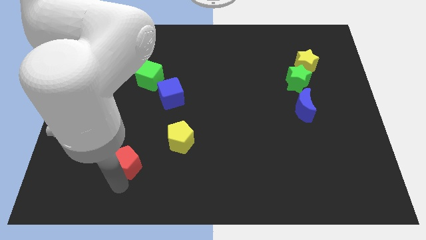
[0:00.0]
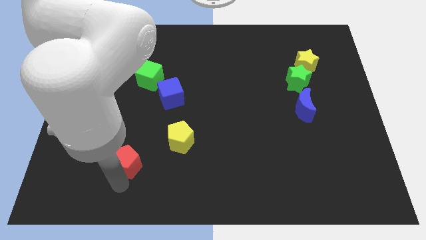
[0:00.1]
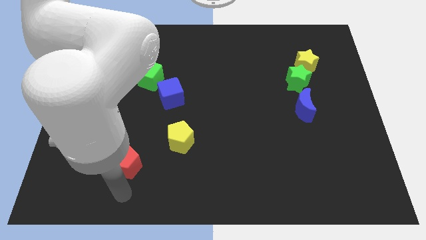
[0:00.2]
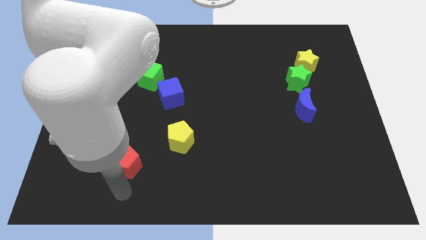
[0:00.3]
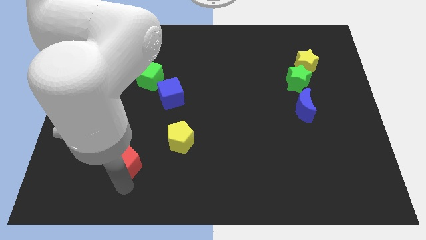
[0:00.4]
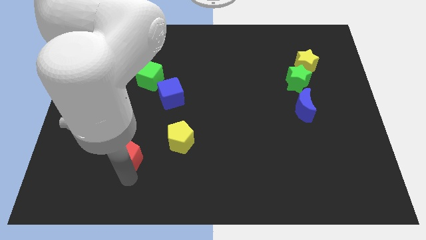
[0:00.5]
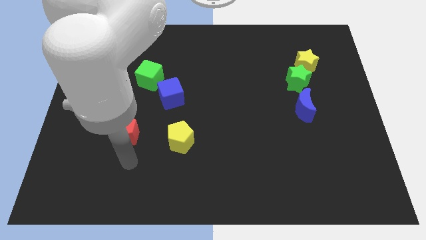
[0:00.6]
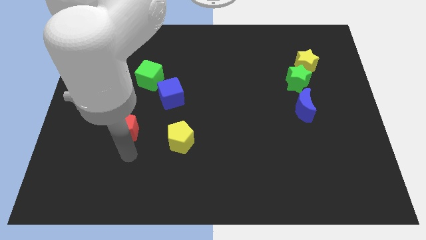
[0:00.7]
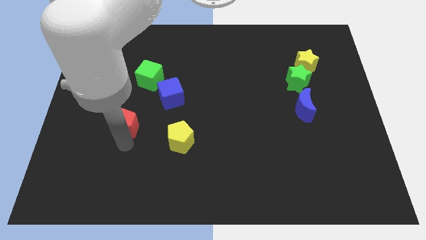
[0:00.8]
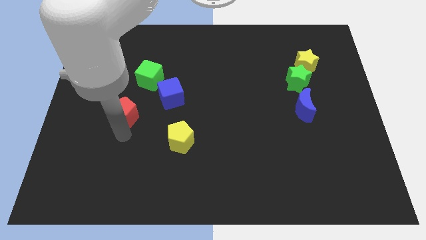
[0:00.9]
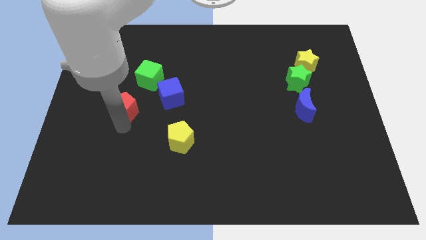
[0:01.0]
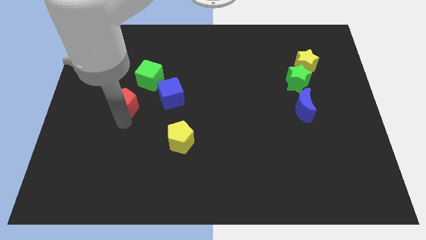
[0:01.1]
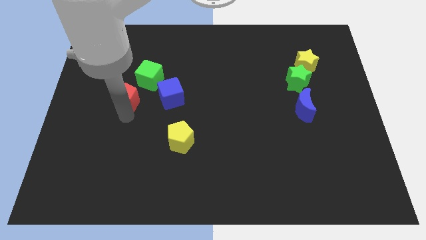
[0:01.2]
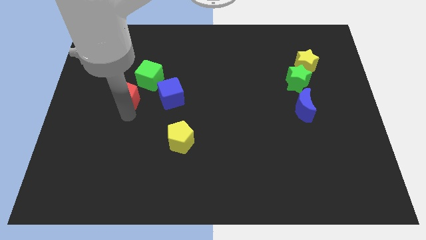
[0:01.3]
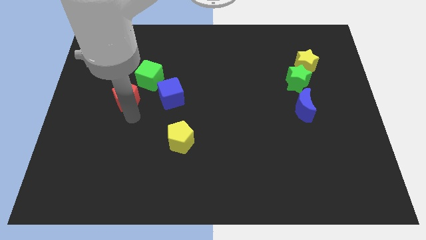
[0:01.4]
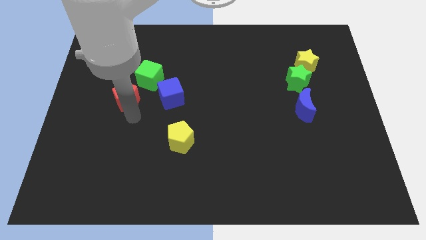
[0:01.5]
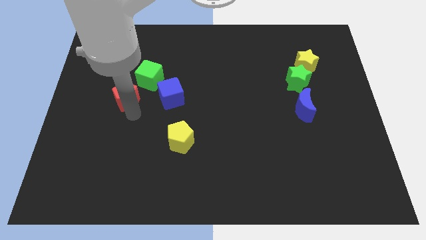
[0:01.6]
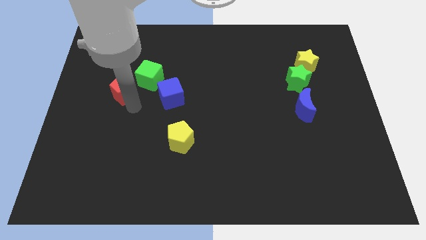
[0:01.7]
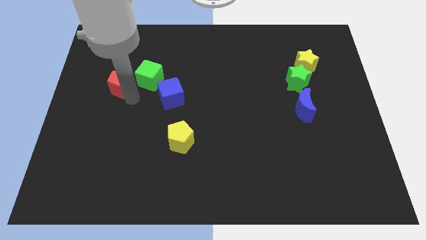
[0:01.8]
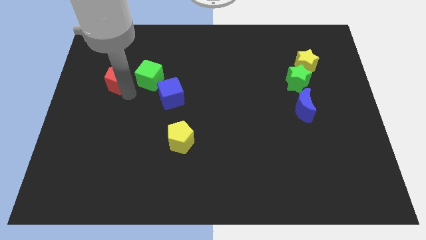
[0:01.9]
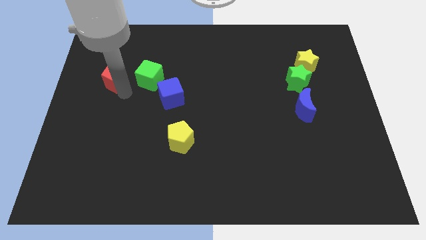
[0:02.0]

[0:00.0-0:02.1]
push the red pentagon to the left of green cube

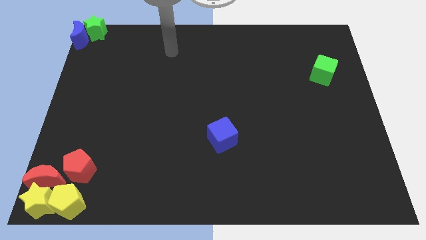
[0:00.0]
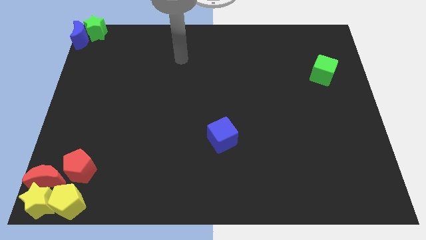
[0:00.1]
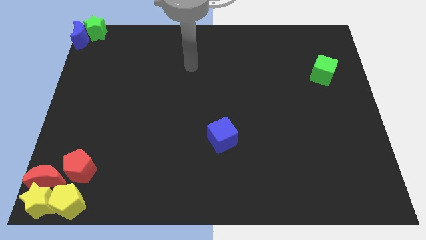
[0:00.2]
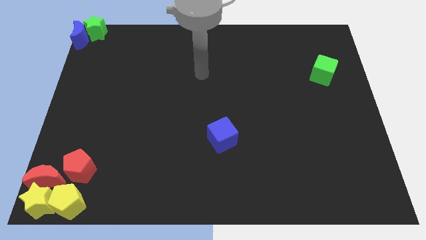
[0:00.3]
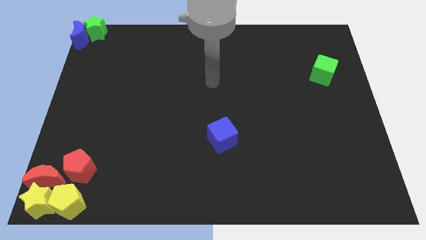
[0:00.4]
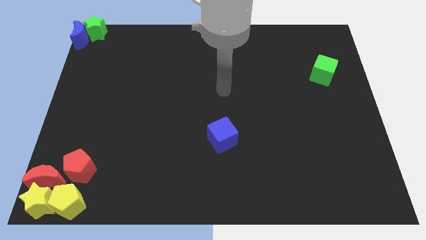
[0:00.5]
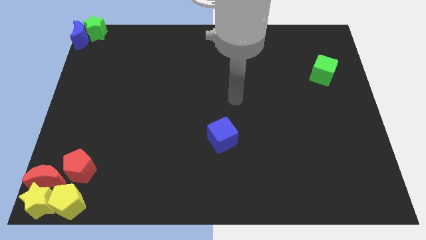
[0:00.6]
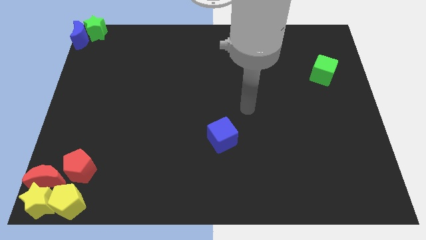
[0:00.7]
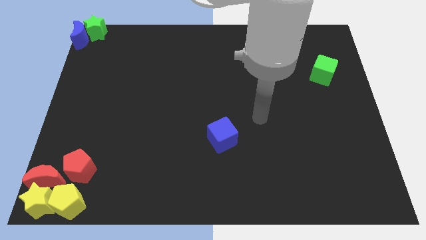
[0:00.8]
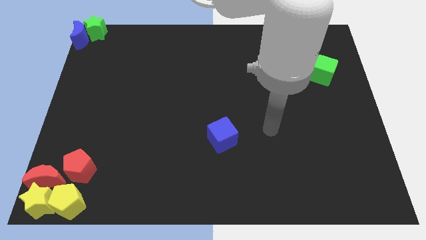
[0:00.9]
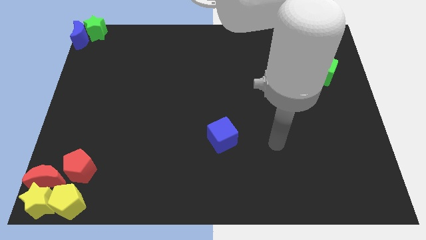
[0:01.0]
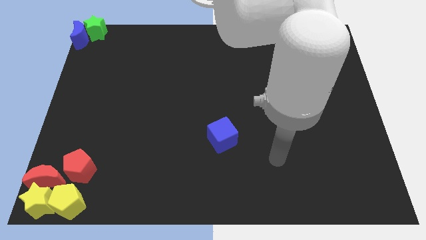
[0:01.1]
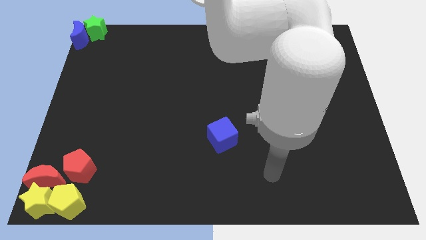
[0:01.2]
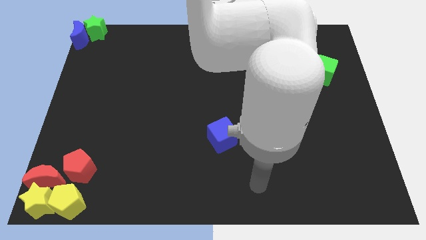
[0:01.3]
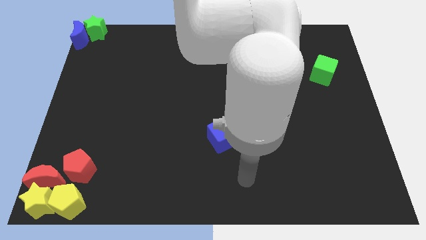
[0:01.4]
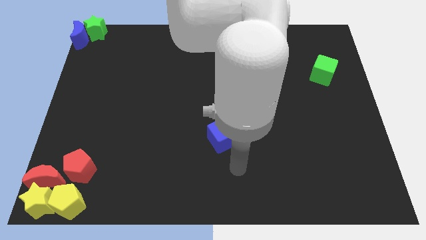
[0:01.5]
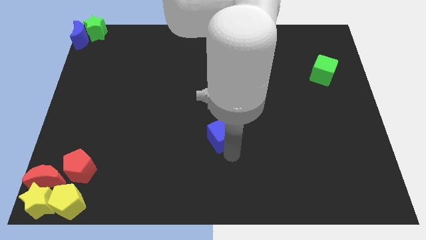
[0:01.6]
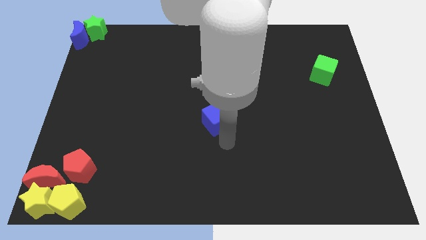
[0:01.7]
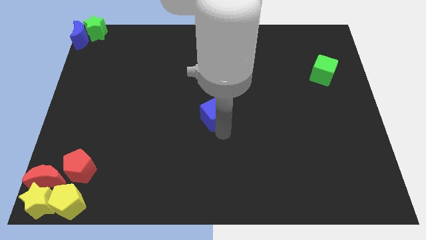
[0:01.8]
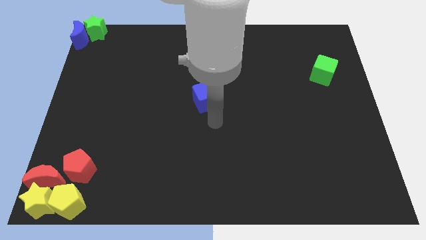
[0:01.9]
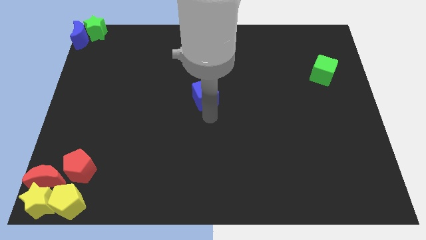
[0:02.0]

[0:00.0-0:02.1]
move the blue cube to the center of the board

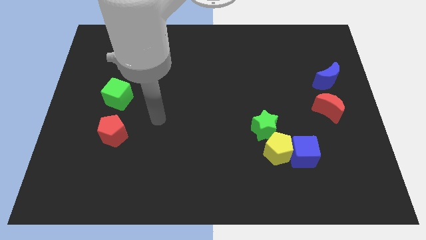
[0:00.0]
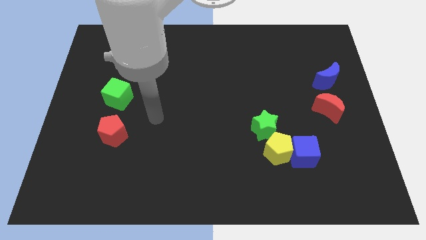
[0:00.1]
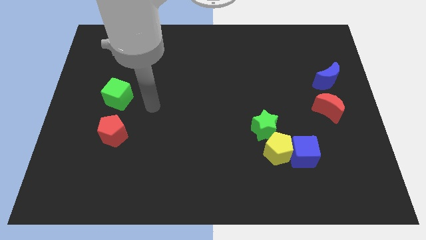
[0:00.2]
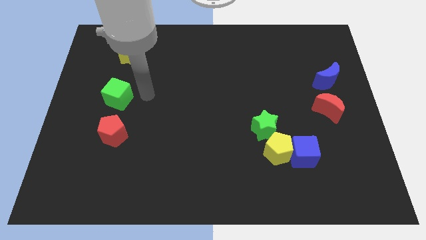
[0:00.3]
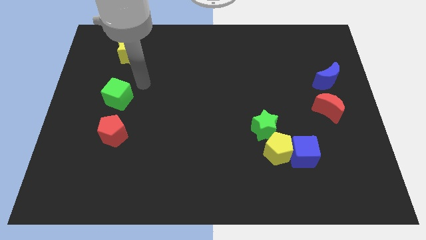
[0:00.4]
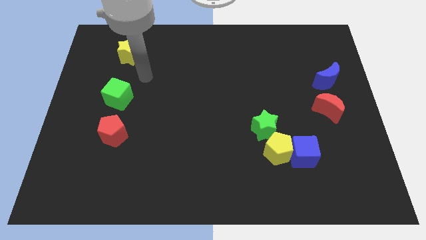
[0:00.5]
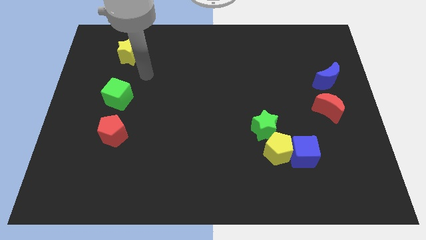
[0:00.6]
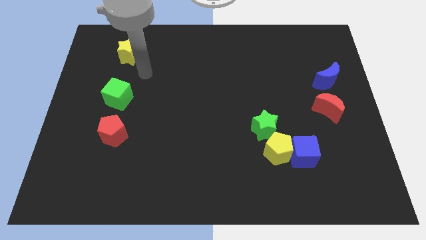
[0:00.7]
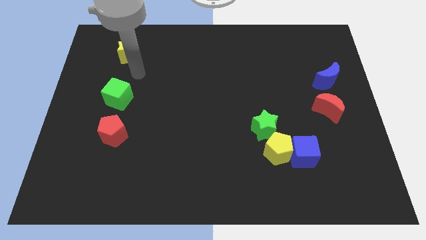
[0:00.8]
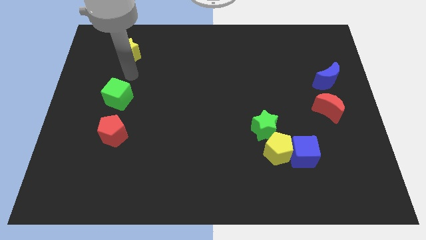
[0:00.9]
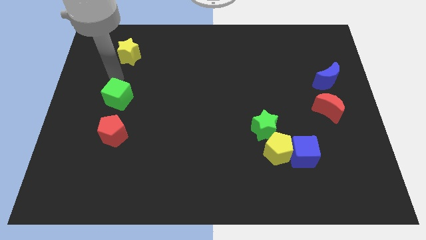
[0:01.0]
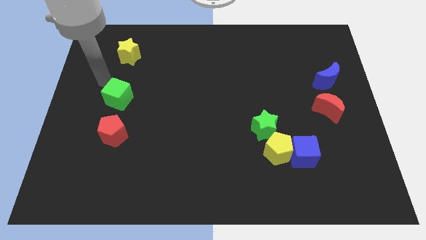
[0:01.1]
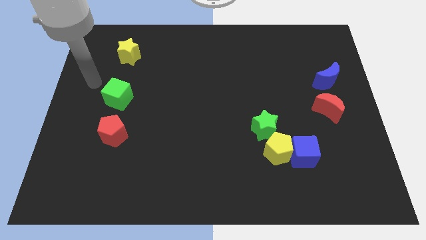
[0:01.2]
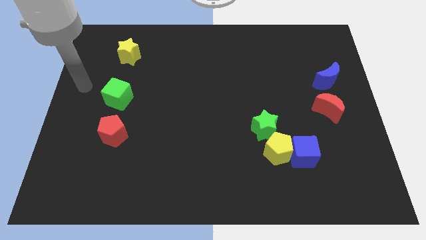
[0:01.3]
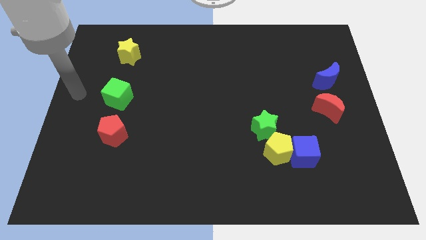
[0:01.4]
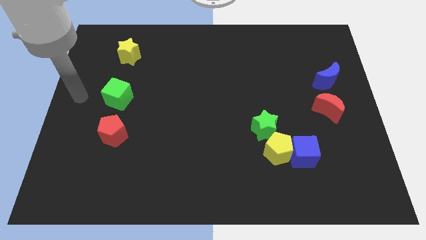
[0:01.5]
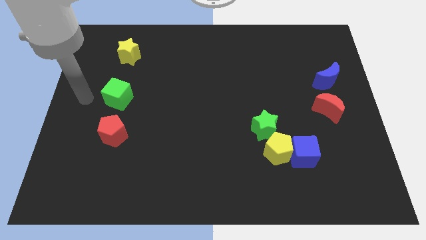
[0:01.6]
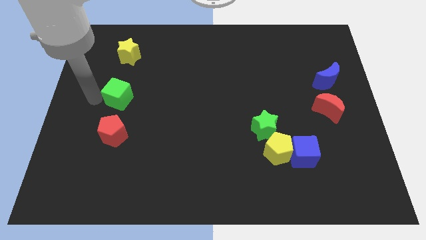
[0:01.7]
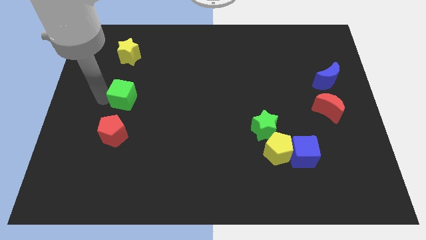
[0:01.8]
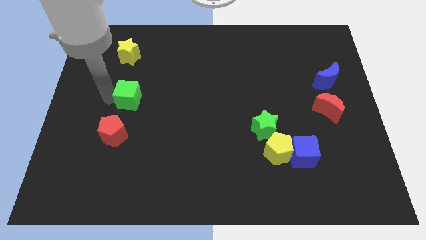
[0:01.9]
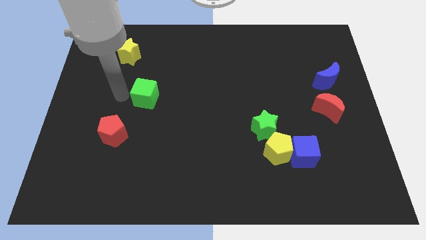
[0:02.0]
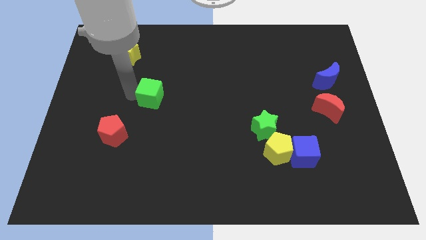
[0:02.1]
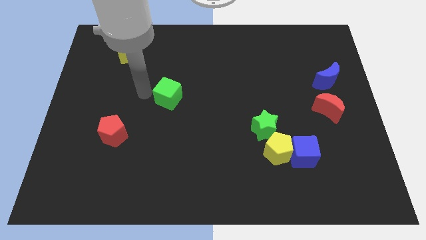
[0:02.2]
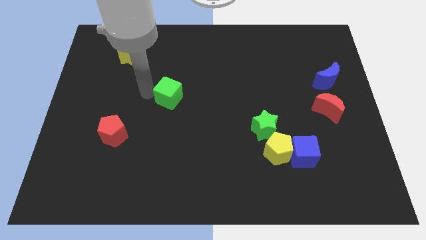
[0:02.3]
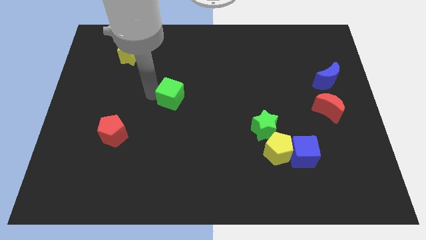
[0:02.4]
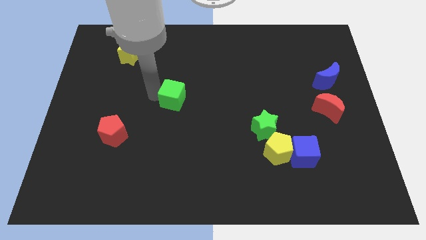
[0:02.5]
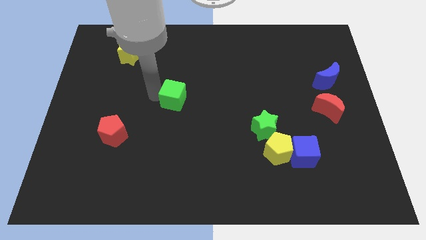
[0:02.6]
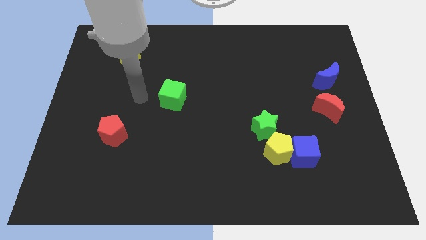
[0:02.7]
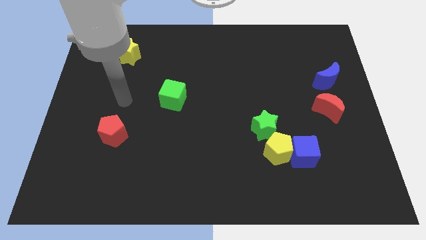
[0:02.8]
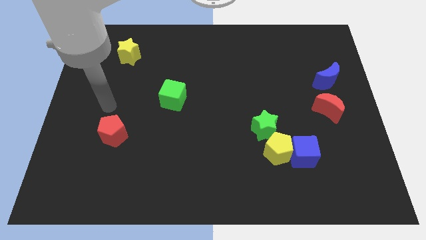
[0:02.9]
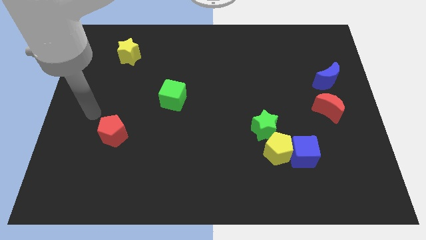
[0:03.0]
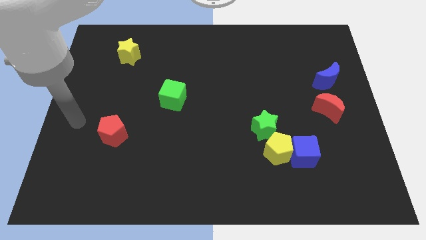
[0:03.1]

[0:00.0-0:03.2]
push the green cube to the center of the board

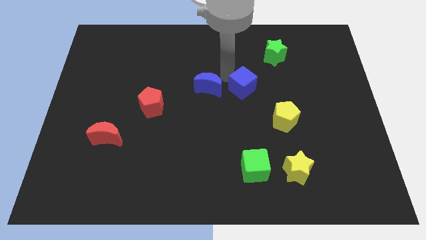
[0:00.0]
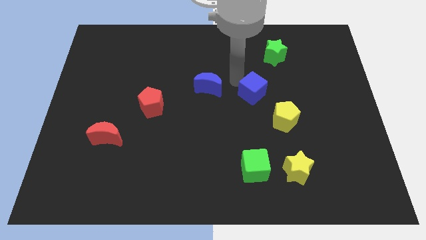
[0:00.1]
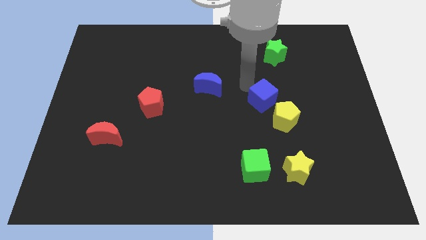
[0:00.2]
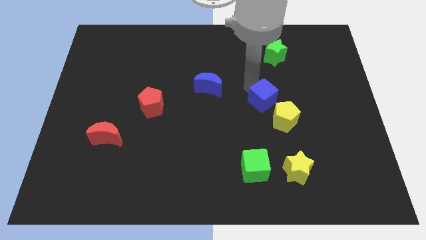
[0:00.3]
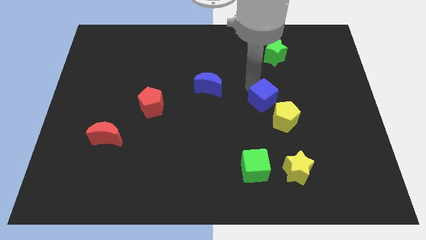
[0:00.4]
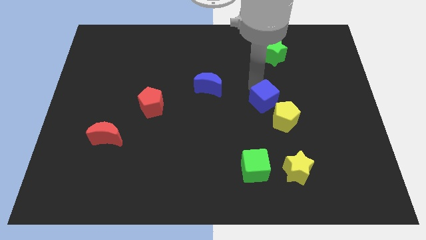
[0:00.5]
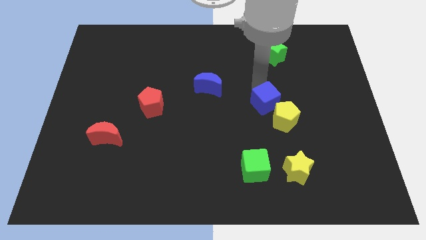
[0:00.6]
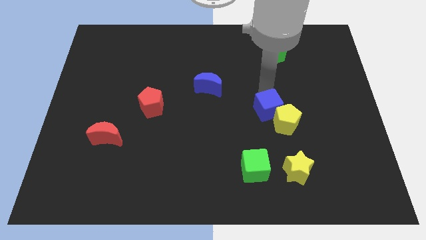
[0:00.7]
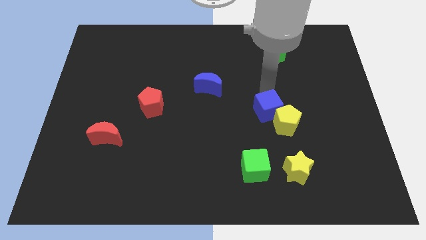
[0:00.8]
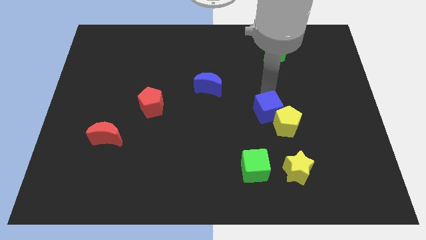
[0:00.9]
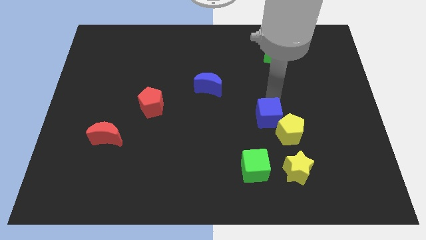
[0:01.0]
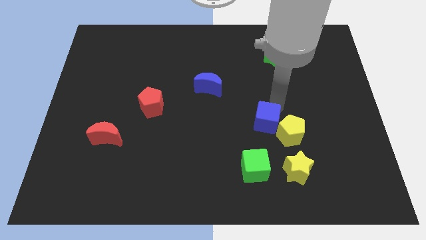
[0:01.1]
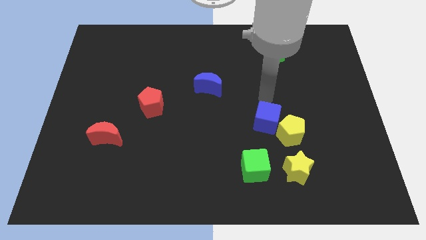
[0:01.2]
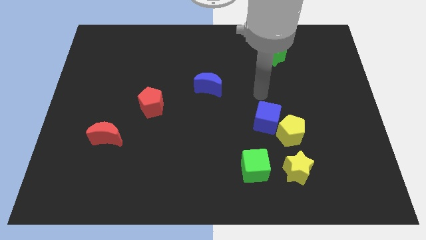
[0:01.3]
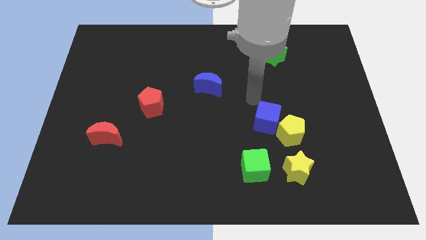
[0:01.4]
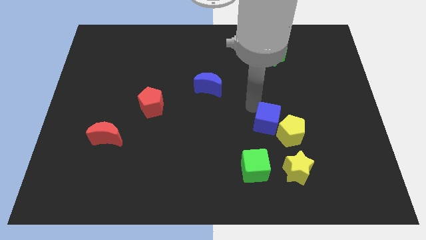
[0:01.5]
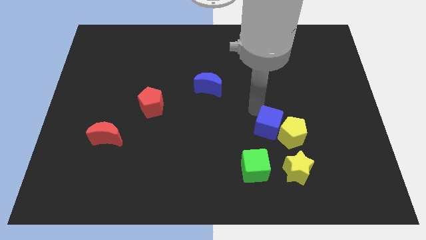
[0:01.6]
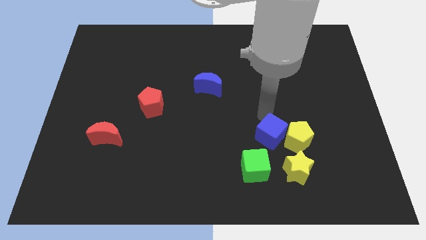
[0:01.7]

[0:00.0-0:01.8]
place the blue cube parallel left to the yellow pentagon
